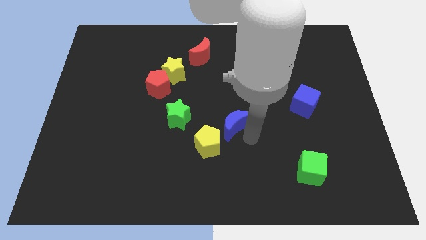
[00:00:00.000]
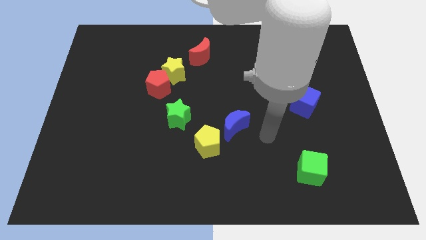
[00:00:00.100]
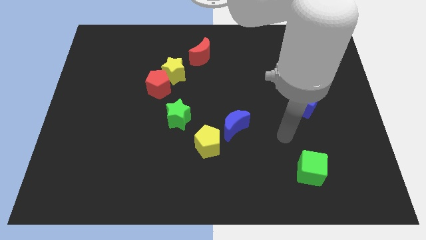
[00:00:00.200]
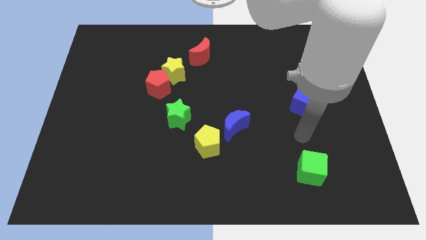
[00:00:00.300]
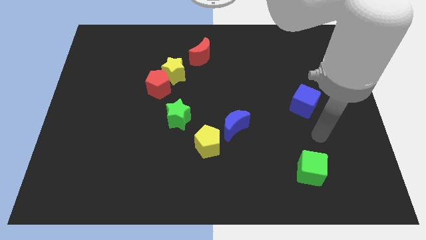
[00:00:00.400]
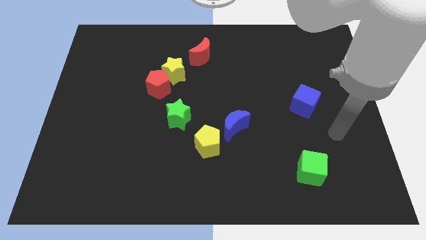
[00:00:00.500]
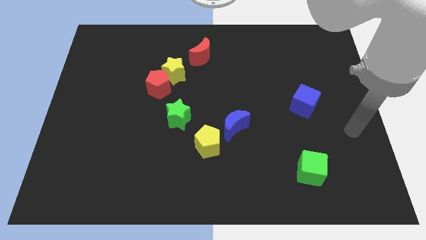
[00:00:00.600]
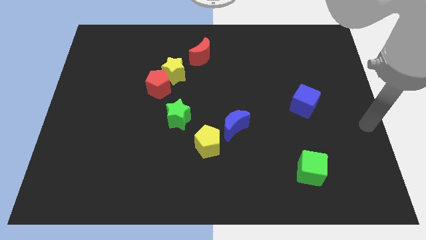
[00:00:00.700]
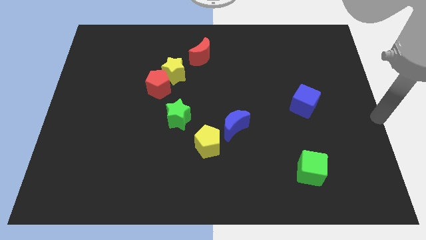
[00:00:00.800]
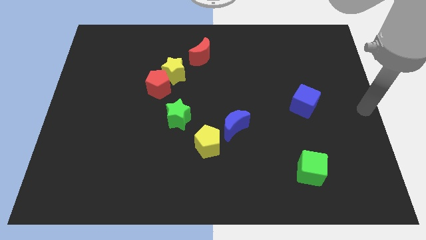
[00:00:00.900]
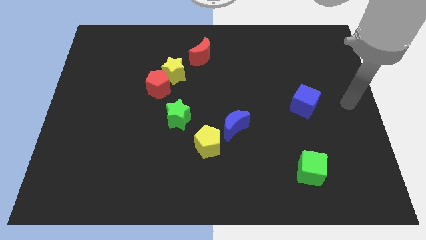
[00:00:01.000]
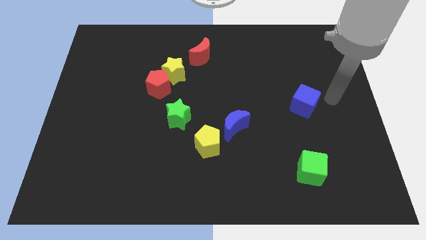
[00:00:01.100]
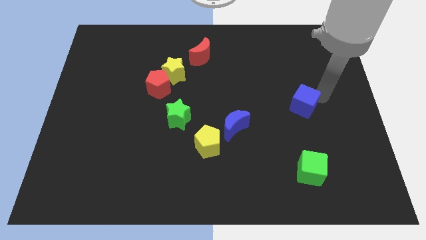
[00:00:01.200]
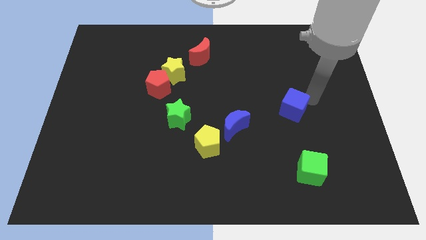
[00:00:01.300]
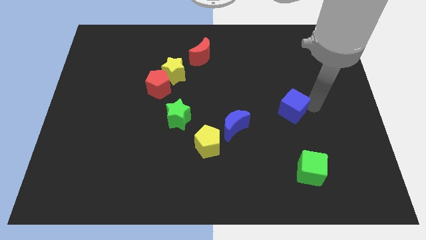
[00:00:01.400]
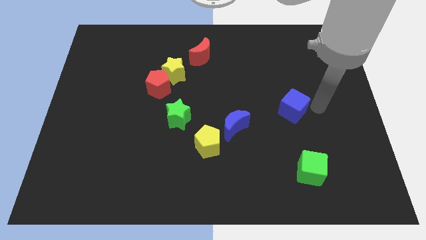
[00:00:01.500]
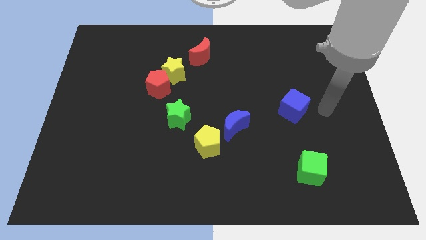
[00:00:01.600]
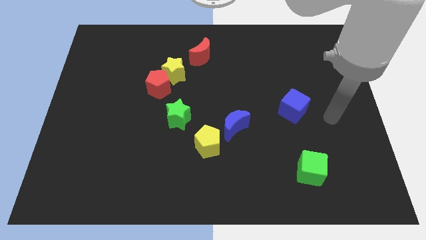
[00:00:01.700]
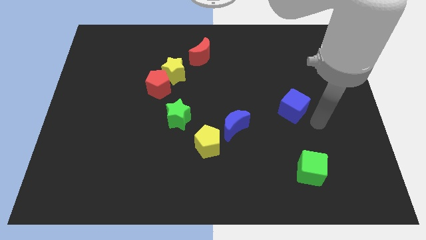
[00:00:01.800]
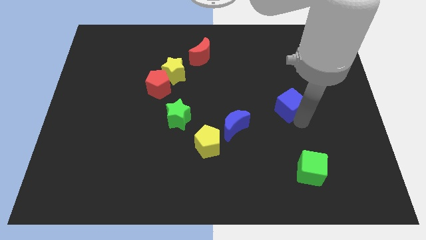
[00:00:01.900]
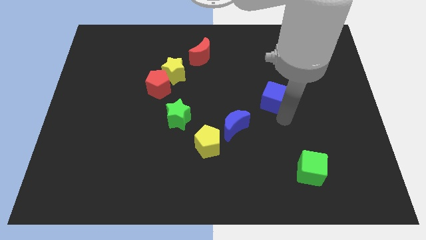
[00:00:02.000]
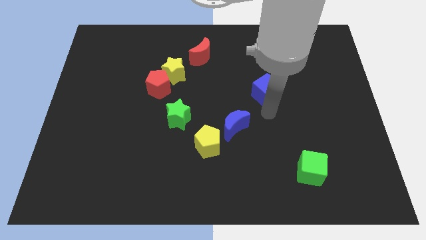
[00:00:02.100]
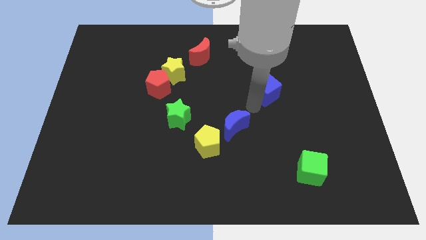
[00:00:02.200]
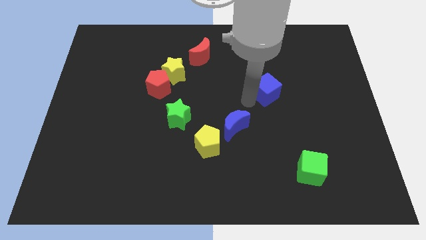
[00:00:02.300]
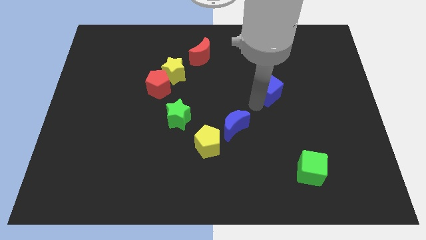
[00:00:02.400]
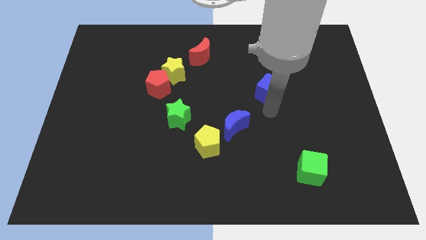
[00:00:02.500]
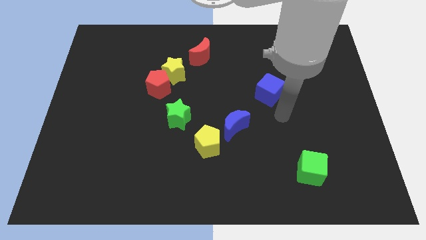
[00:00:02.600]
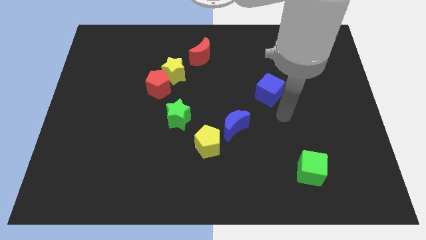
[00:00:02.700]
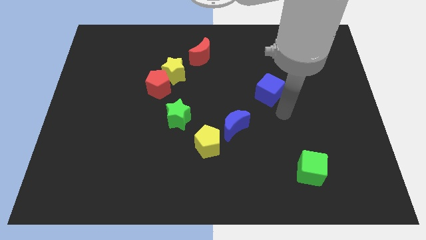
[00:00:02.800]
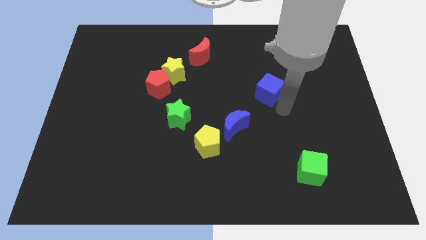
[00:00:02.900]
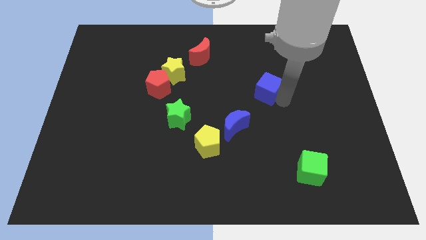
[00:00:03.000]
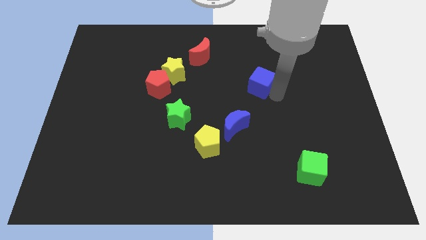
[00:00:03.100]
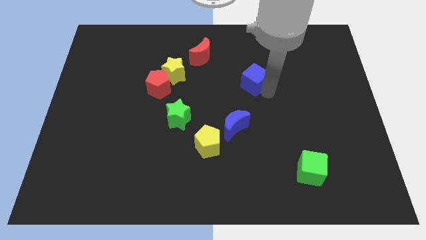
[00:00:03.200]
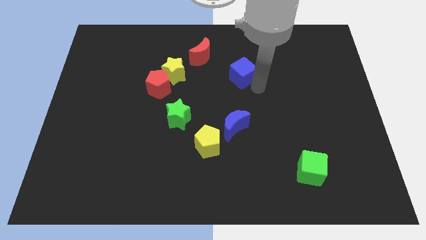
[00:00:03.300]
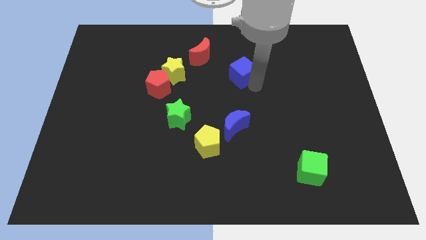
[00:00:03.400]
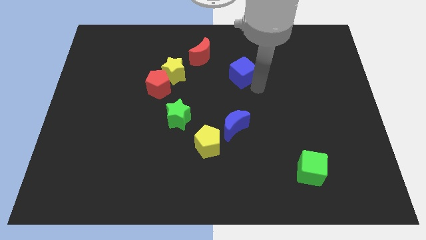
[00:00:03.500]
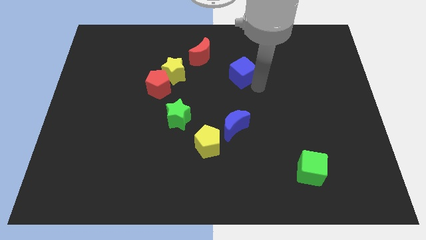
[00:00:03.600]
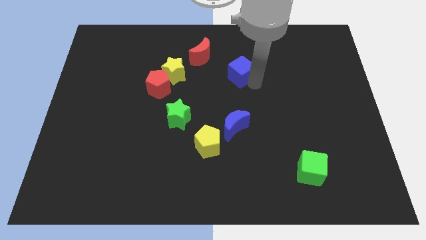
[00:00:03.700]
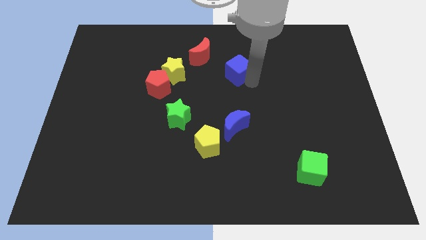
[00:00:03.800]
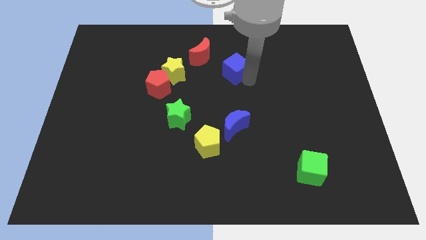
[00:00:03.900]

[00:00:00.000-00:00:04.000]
push the blue cube to the right of the red crescent

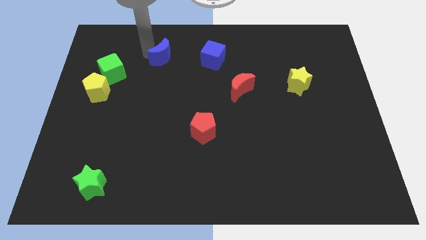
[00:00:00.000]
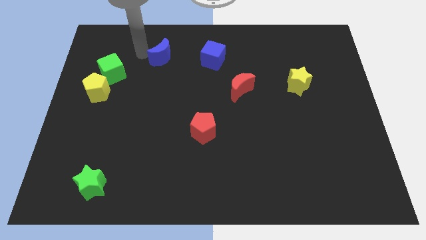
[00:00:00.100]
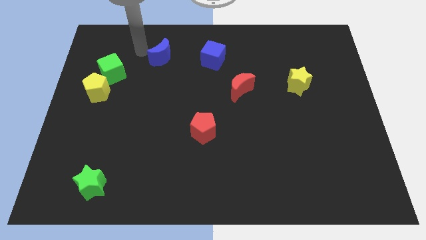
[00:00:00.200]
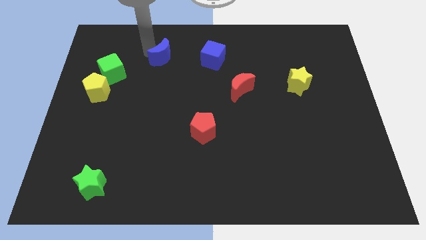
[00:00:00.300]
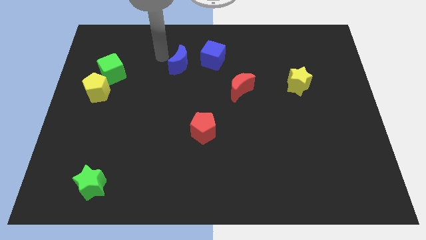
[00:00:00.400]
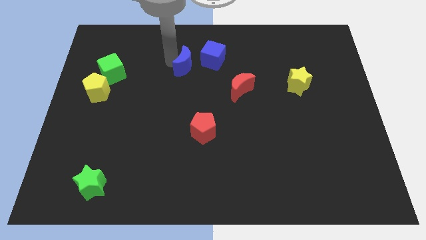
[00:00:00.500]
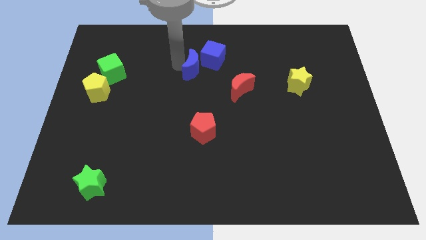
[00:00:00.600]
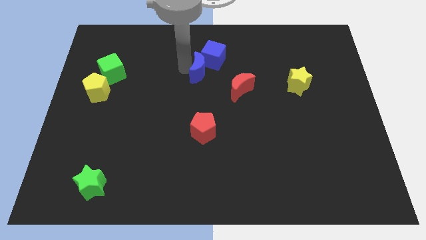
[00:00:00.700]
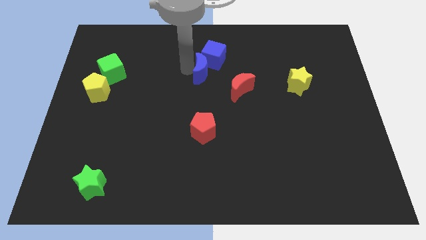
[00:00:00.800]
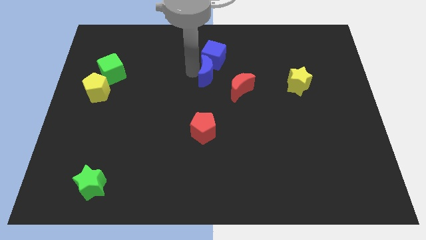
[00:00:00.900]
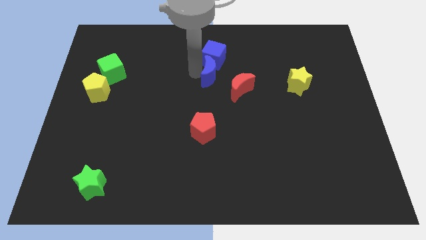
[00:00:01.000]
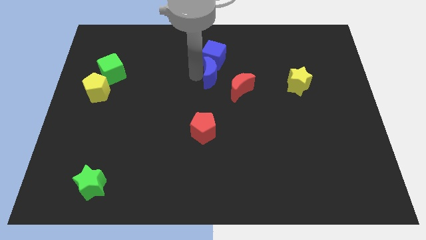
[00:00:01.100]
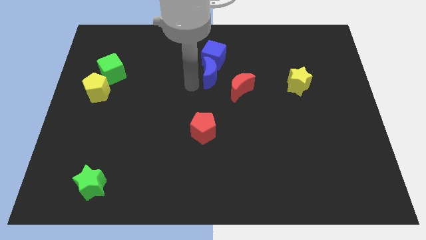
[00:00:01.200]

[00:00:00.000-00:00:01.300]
push the blue crescent to the bottom of the blue cube

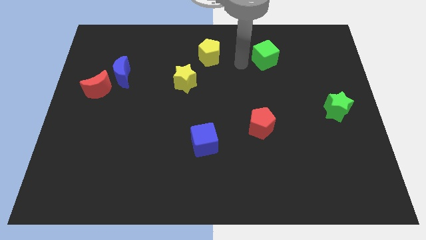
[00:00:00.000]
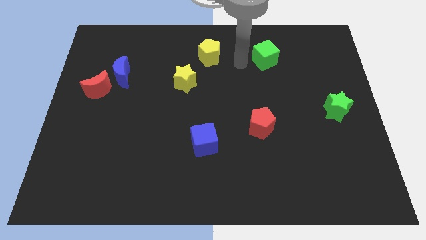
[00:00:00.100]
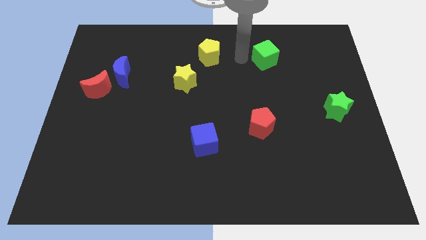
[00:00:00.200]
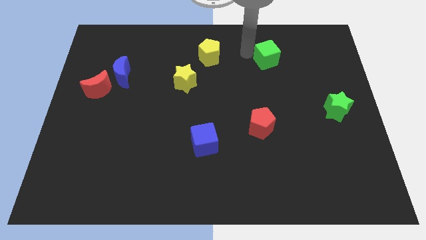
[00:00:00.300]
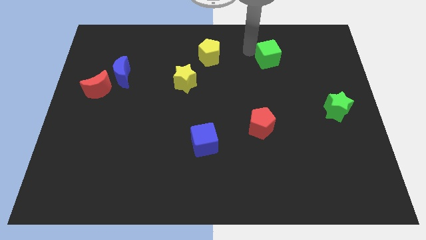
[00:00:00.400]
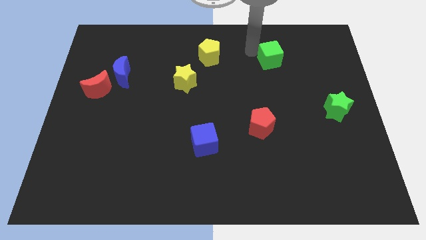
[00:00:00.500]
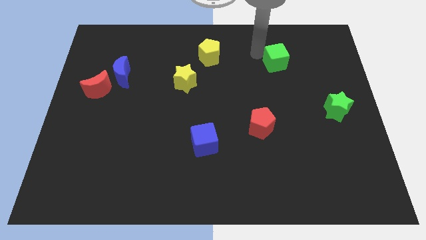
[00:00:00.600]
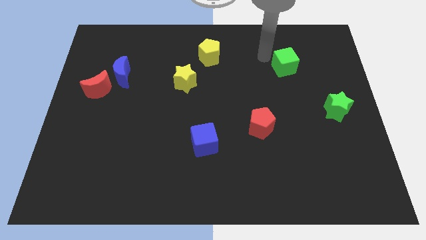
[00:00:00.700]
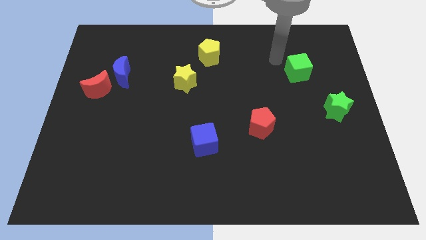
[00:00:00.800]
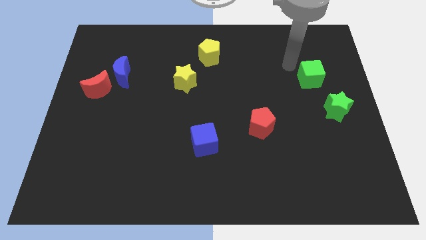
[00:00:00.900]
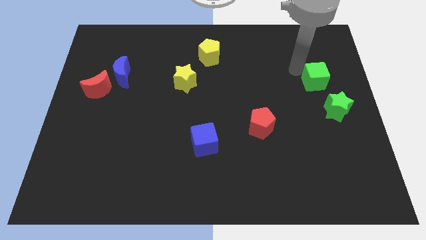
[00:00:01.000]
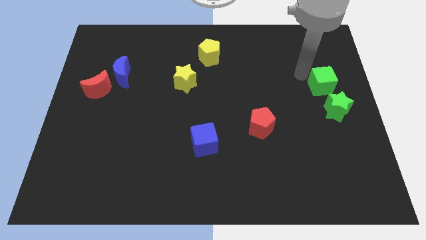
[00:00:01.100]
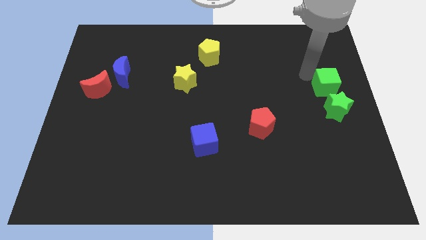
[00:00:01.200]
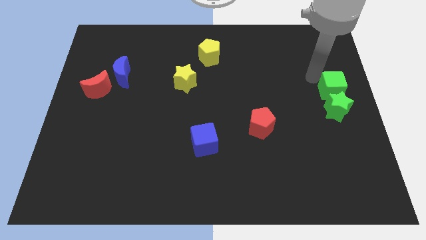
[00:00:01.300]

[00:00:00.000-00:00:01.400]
move the green cube towards the green star

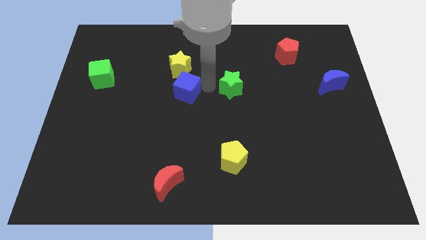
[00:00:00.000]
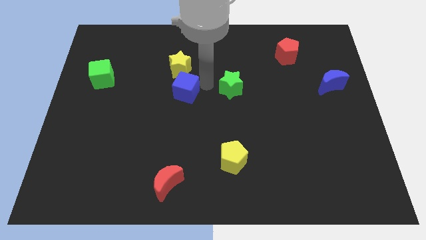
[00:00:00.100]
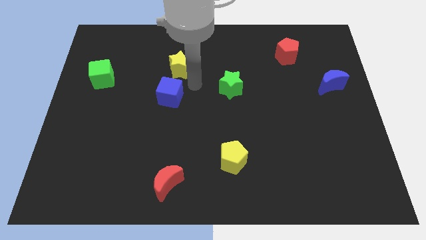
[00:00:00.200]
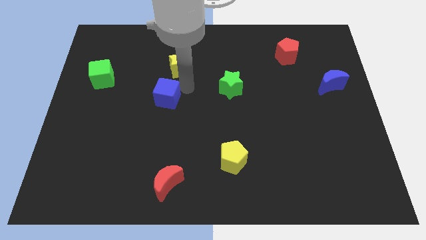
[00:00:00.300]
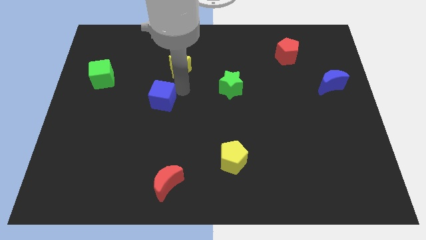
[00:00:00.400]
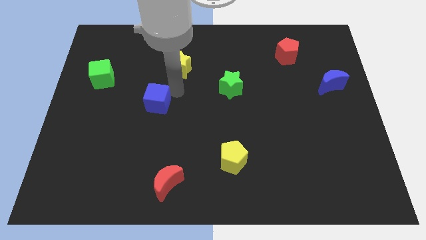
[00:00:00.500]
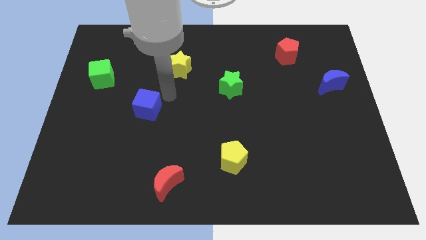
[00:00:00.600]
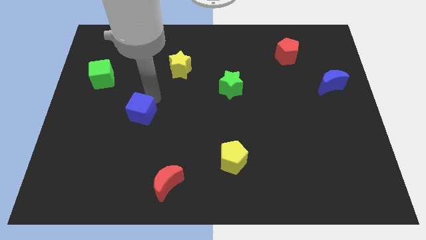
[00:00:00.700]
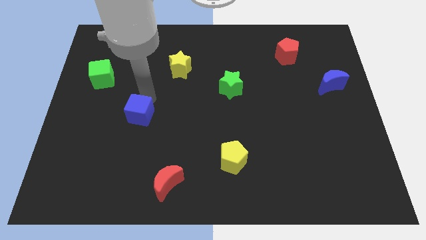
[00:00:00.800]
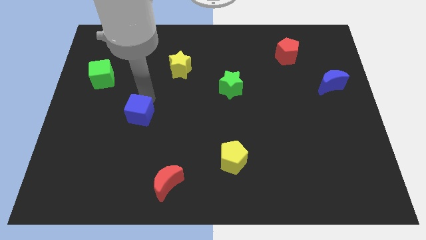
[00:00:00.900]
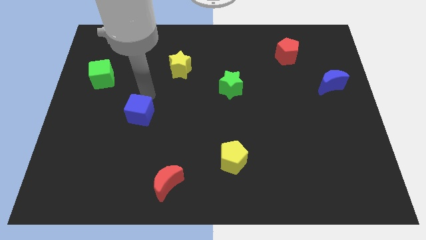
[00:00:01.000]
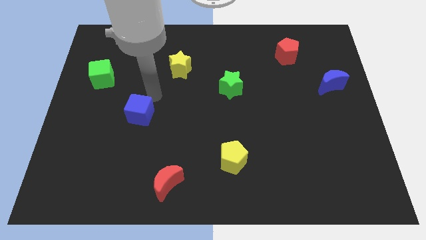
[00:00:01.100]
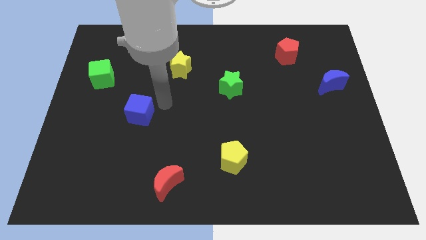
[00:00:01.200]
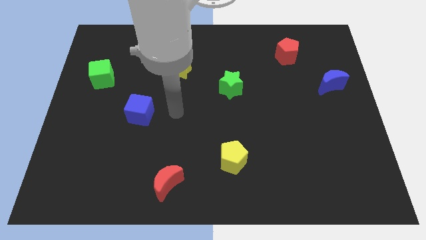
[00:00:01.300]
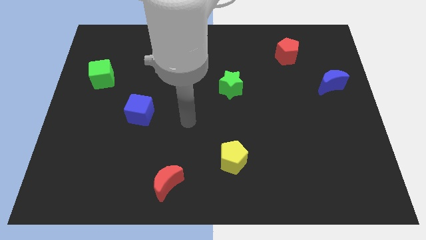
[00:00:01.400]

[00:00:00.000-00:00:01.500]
move the blue cube towards bottom left side of the board

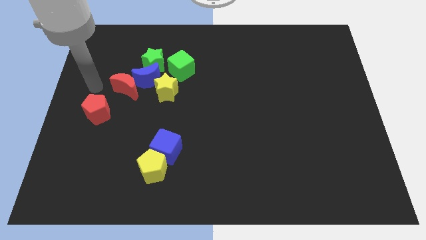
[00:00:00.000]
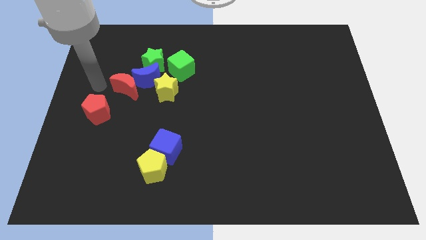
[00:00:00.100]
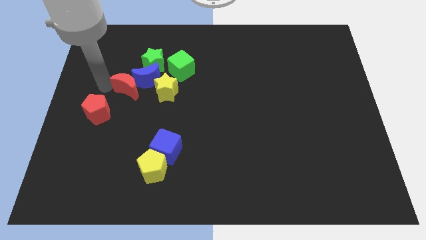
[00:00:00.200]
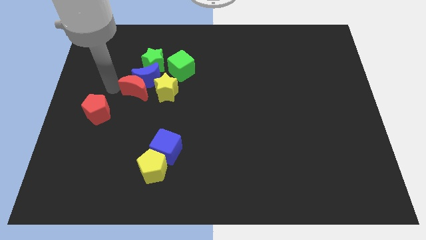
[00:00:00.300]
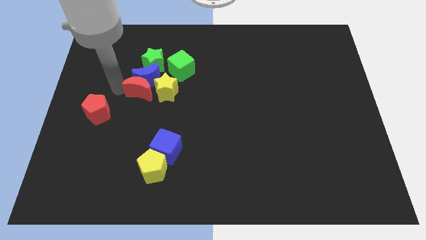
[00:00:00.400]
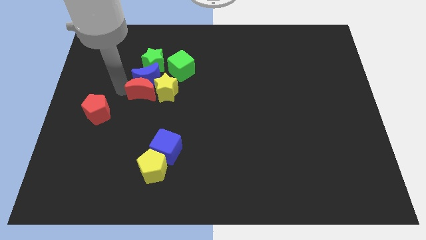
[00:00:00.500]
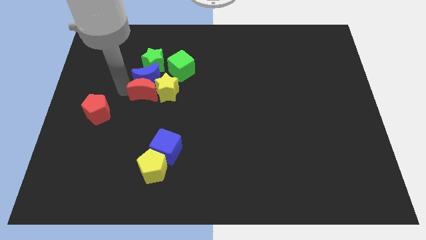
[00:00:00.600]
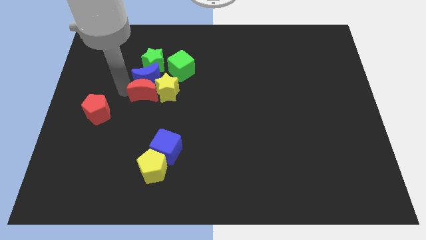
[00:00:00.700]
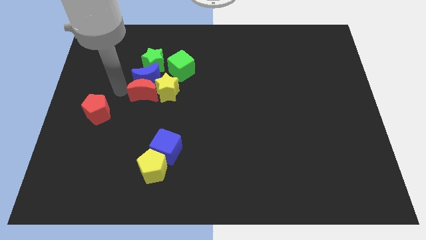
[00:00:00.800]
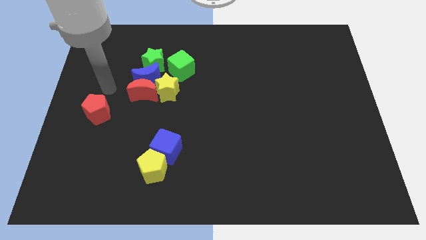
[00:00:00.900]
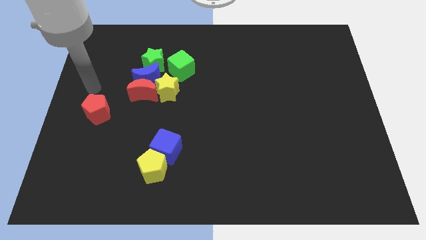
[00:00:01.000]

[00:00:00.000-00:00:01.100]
push the red moon into the yellow star
